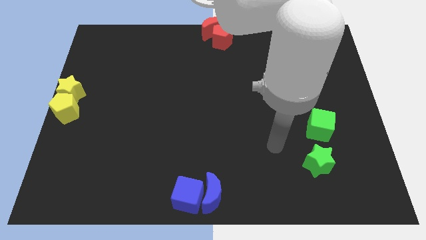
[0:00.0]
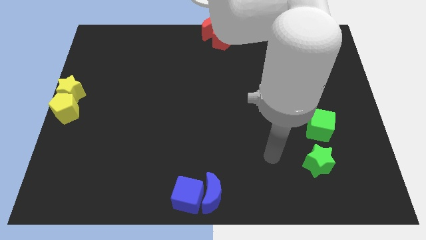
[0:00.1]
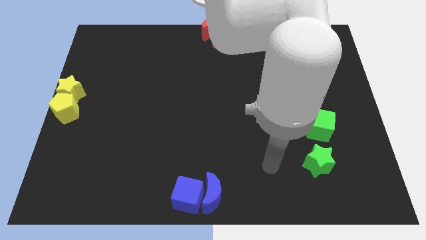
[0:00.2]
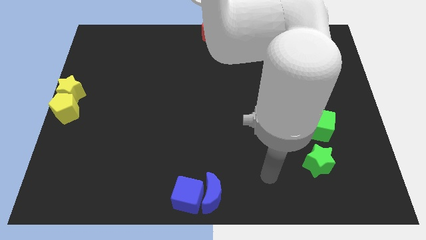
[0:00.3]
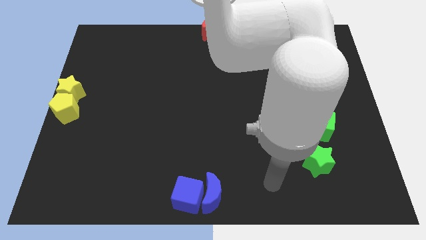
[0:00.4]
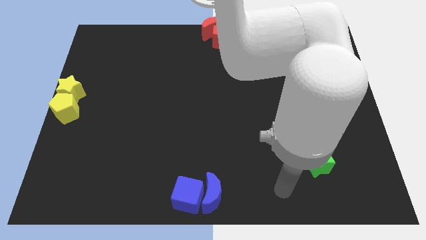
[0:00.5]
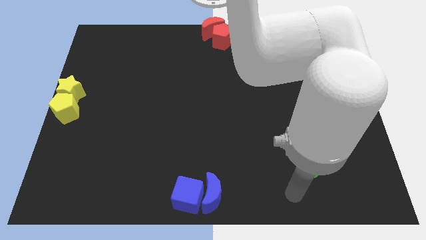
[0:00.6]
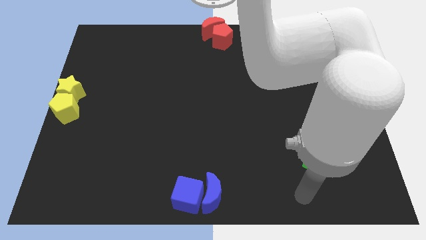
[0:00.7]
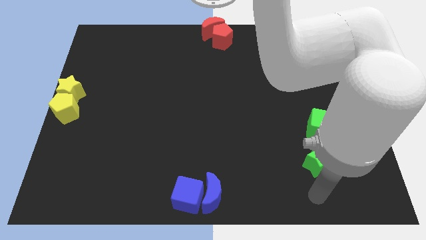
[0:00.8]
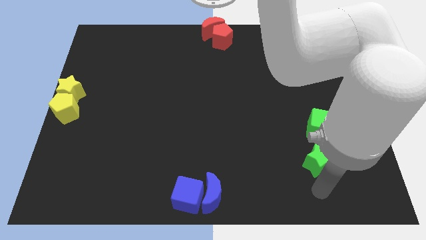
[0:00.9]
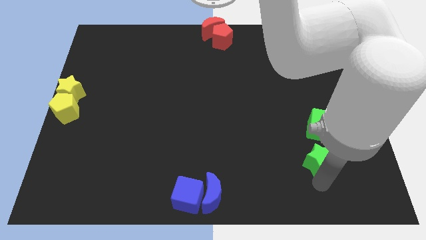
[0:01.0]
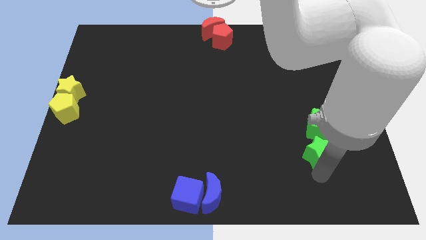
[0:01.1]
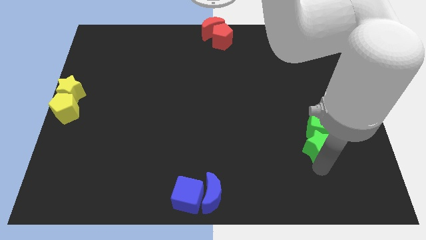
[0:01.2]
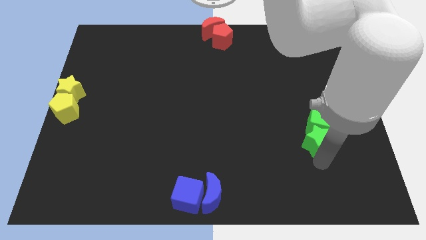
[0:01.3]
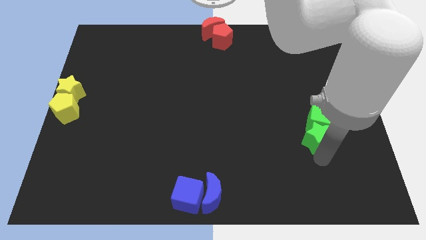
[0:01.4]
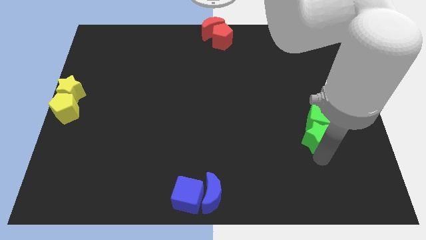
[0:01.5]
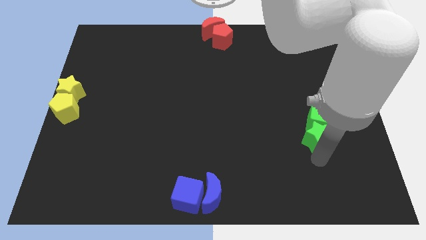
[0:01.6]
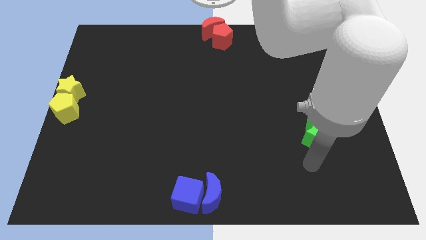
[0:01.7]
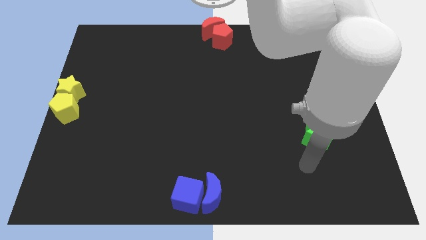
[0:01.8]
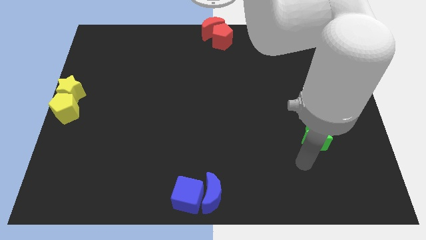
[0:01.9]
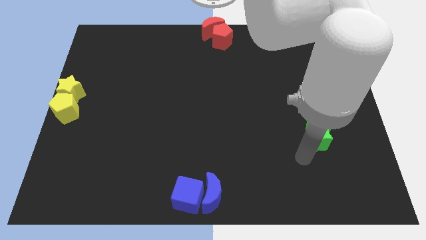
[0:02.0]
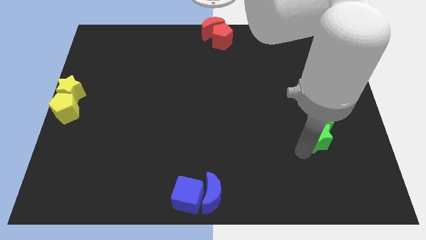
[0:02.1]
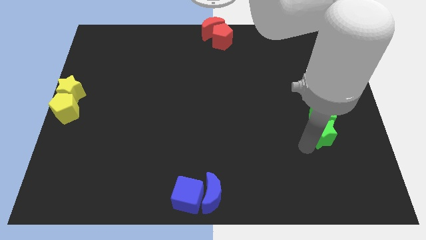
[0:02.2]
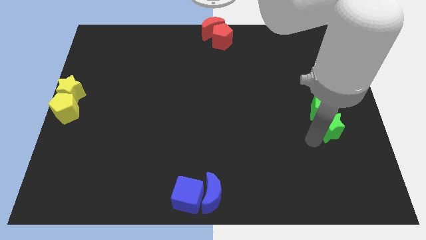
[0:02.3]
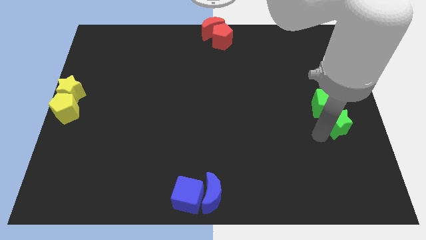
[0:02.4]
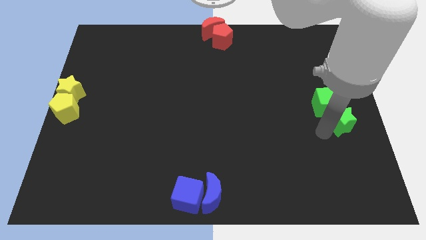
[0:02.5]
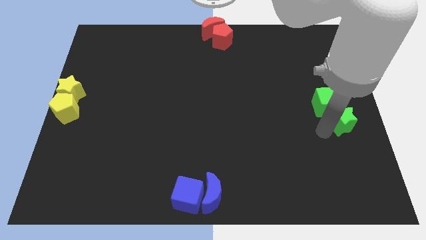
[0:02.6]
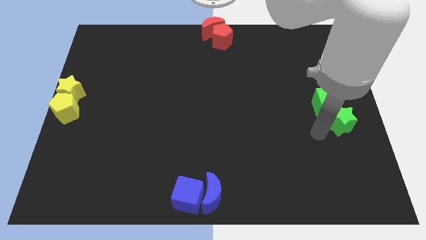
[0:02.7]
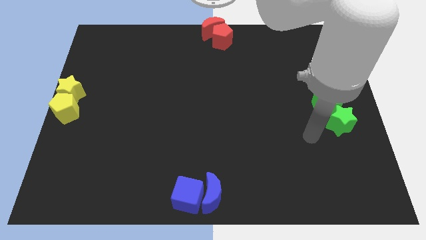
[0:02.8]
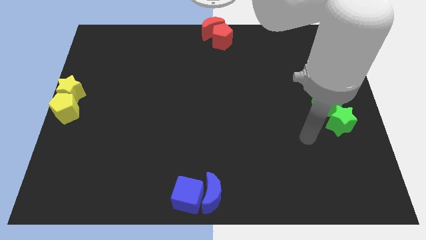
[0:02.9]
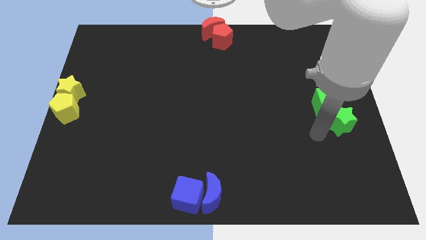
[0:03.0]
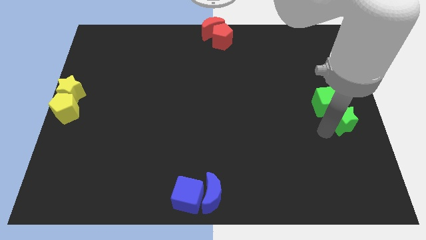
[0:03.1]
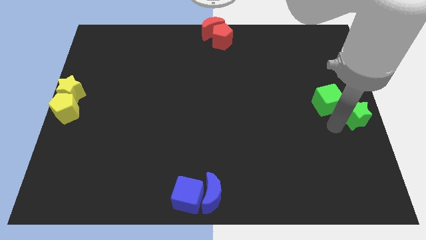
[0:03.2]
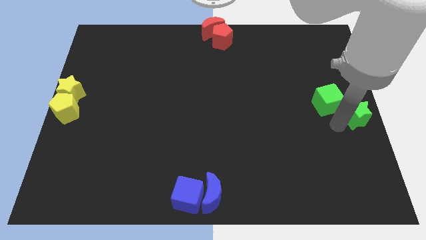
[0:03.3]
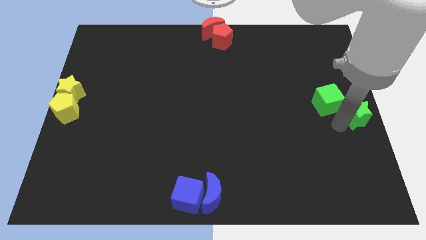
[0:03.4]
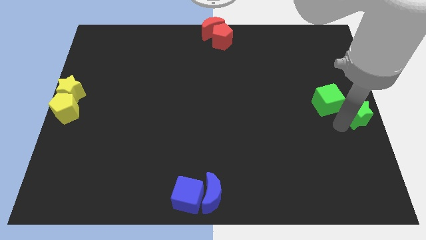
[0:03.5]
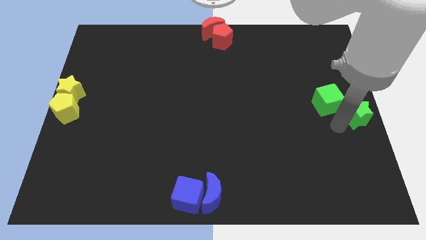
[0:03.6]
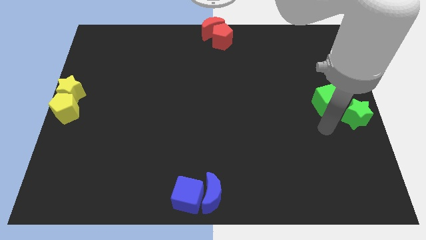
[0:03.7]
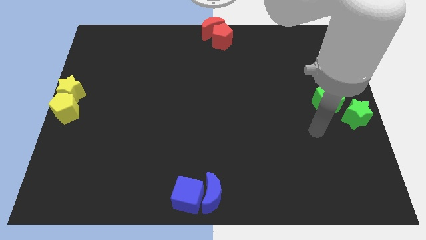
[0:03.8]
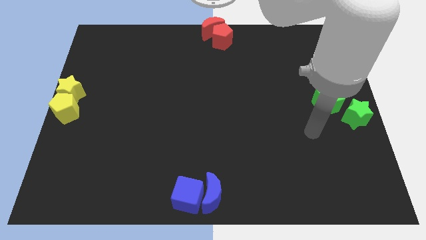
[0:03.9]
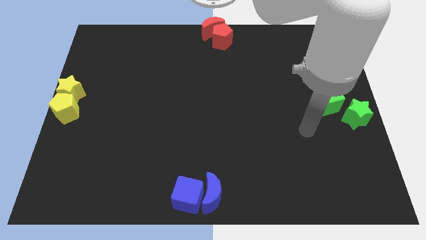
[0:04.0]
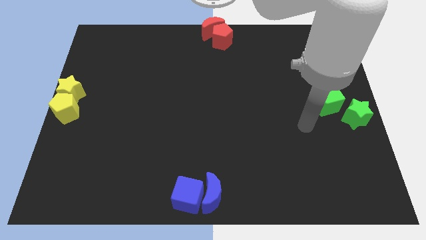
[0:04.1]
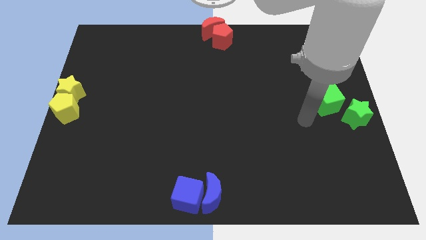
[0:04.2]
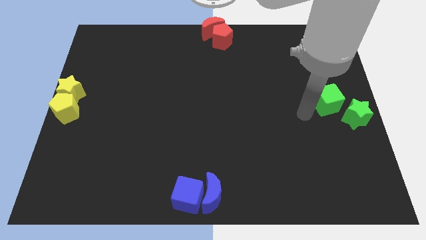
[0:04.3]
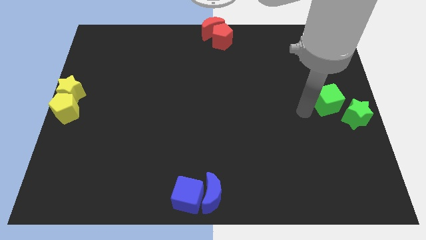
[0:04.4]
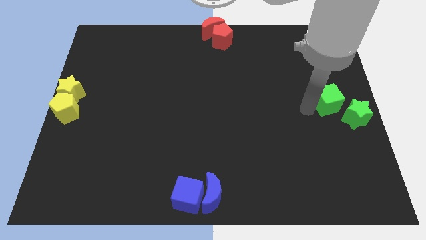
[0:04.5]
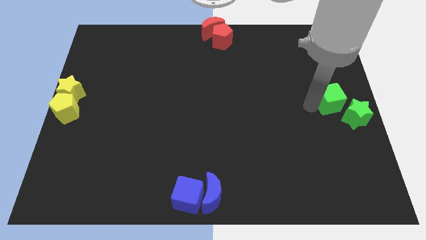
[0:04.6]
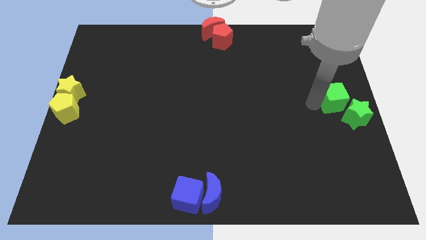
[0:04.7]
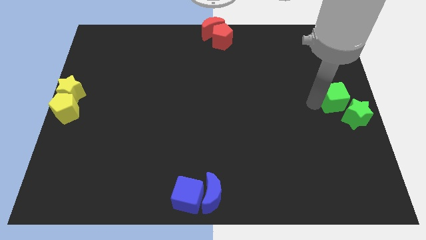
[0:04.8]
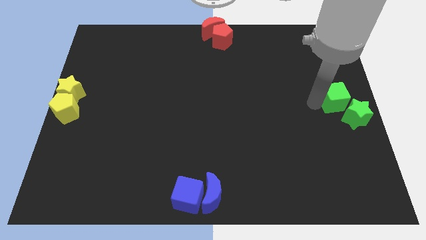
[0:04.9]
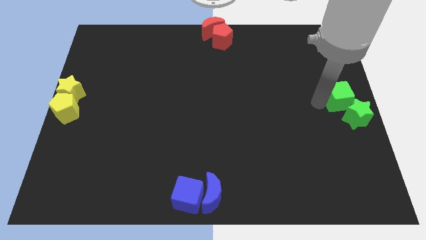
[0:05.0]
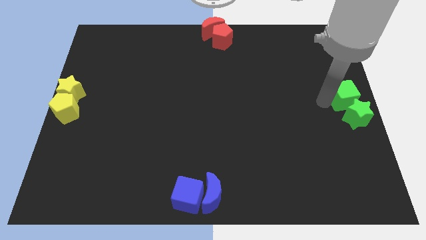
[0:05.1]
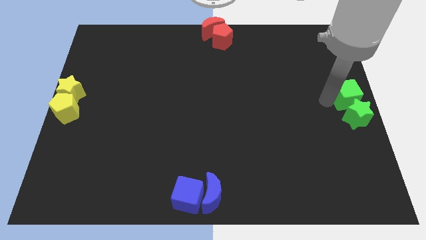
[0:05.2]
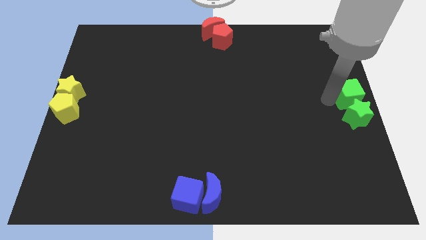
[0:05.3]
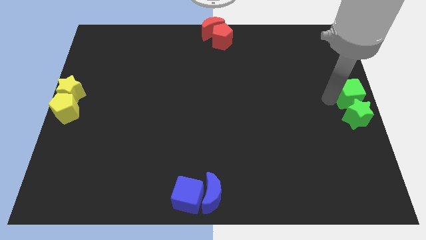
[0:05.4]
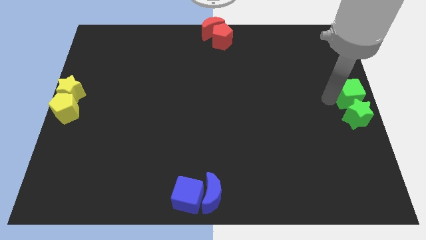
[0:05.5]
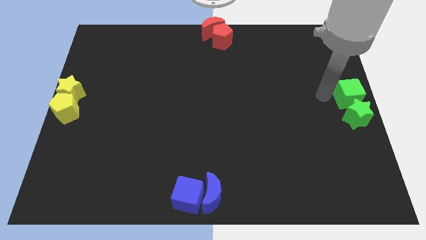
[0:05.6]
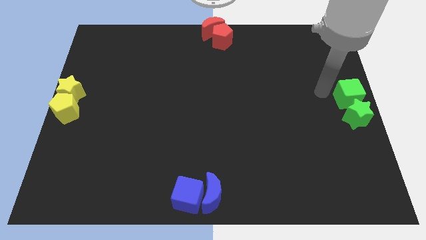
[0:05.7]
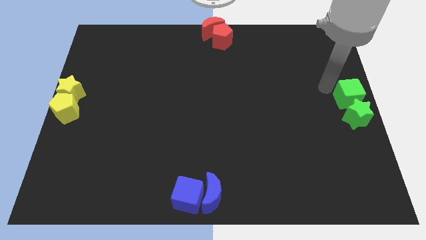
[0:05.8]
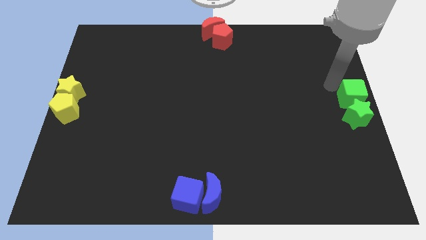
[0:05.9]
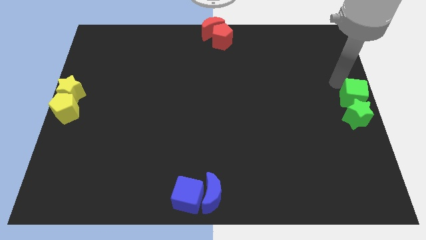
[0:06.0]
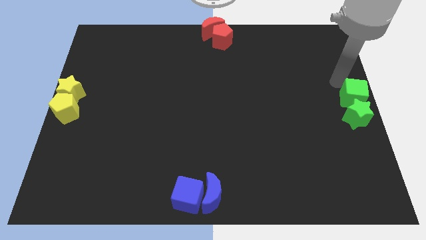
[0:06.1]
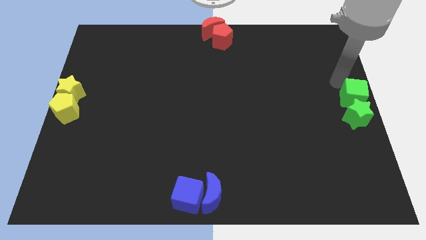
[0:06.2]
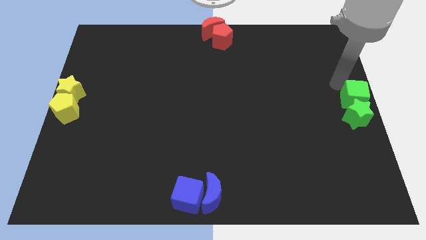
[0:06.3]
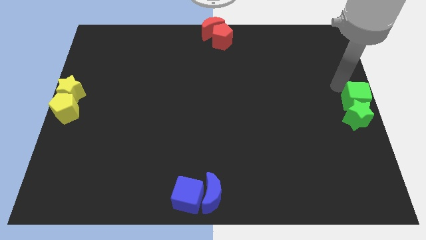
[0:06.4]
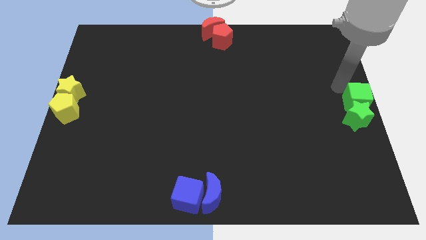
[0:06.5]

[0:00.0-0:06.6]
push the green star and green cube to the right side of the board

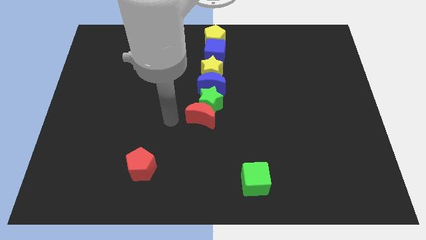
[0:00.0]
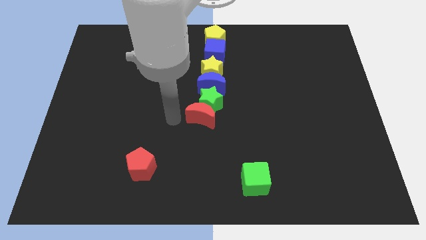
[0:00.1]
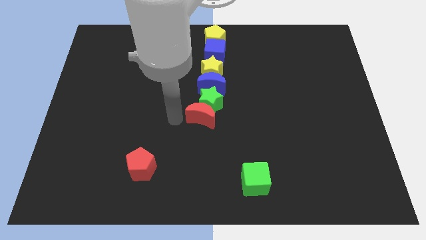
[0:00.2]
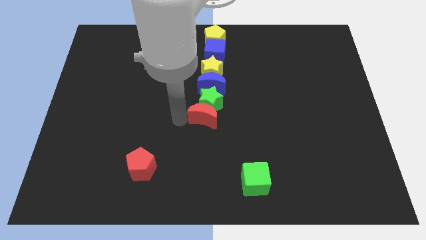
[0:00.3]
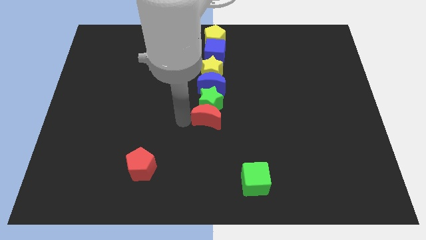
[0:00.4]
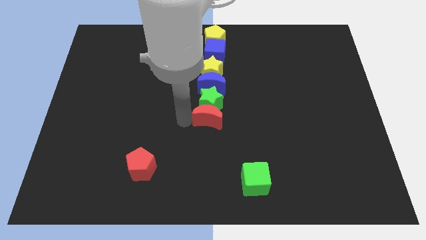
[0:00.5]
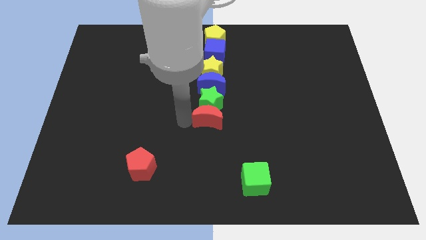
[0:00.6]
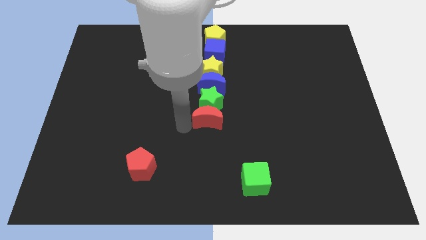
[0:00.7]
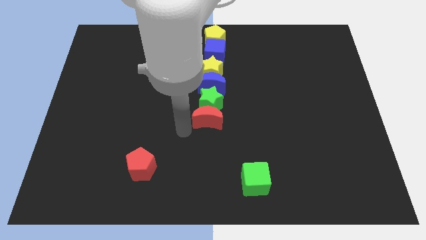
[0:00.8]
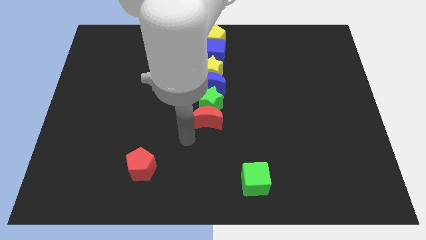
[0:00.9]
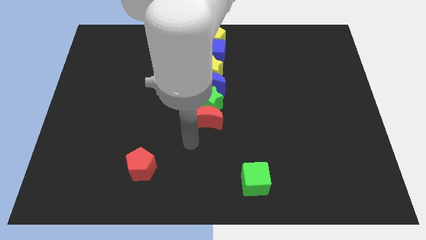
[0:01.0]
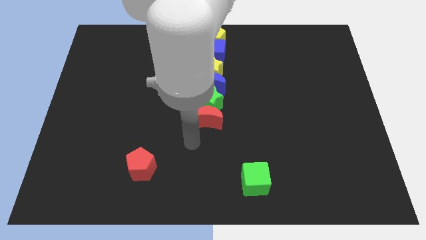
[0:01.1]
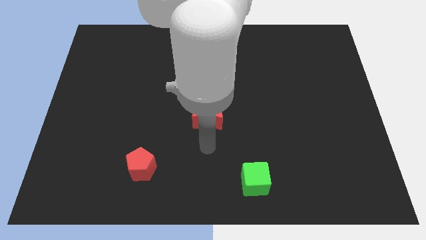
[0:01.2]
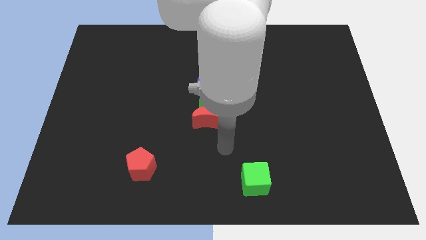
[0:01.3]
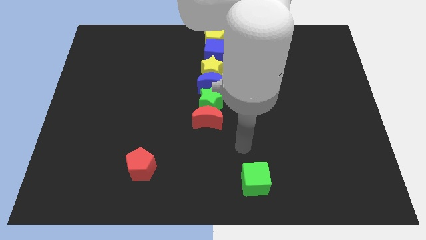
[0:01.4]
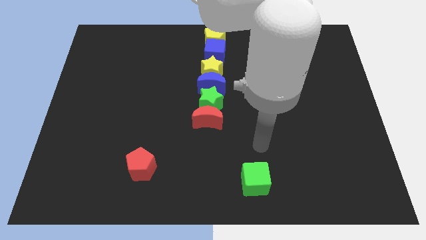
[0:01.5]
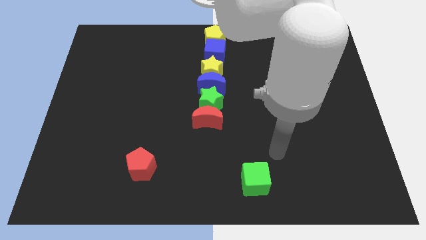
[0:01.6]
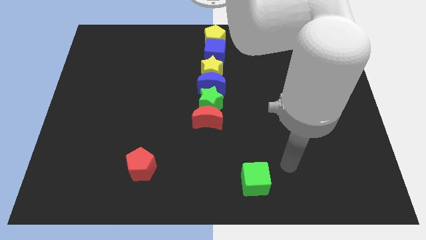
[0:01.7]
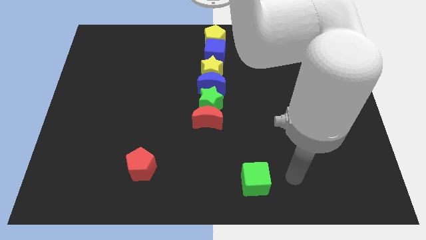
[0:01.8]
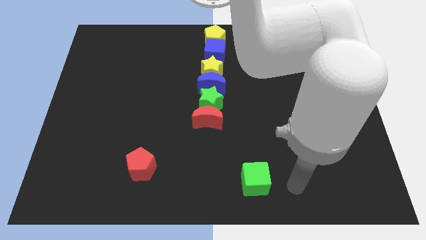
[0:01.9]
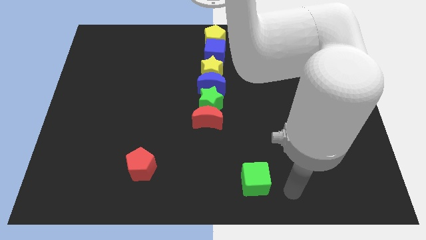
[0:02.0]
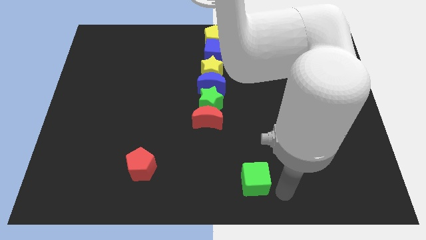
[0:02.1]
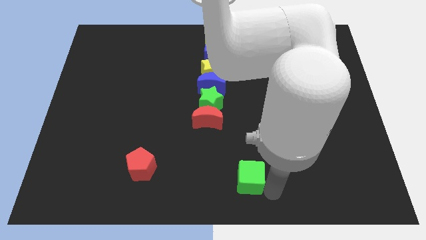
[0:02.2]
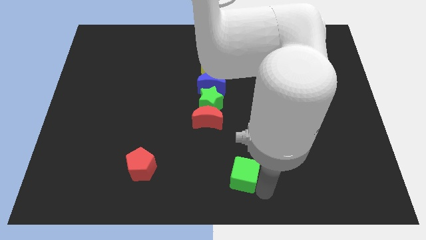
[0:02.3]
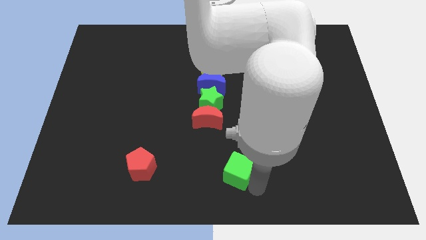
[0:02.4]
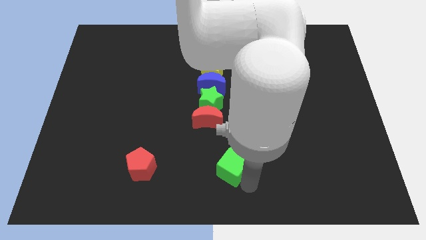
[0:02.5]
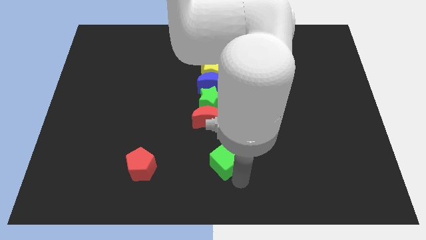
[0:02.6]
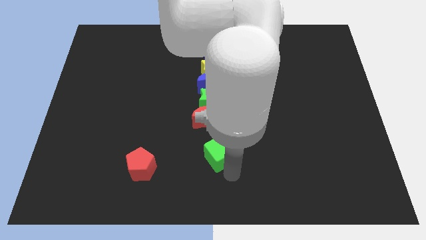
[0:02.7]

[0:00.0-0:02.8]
move your arm away from the red moon
